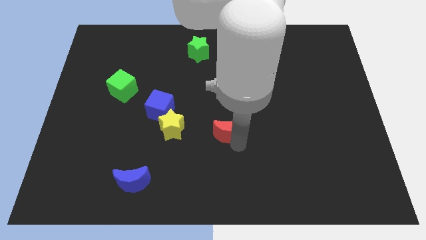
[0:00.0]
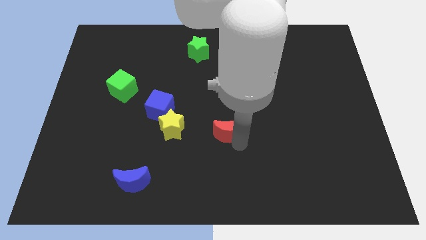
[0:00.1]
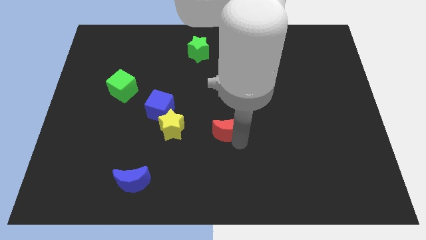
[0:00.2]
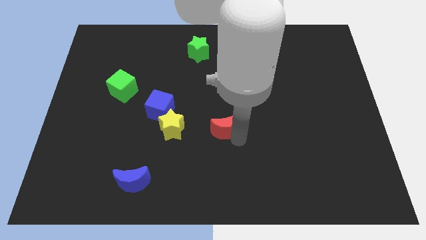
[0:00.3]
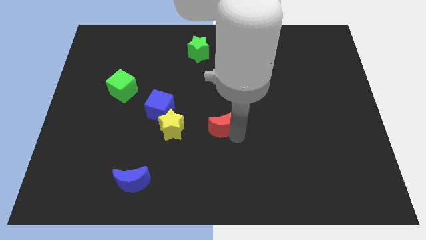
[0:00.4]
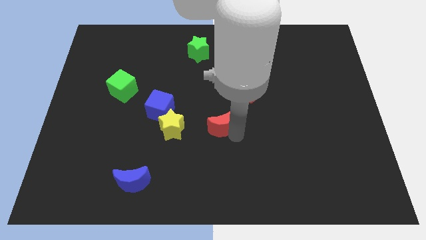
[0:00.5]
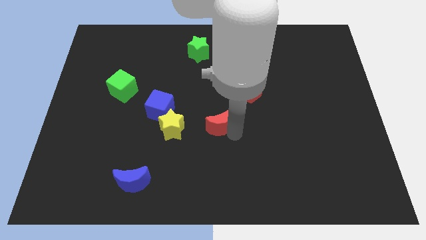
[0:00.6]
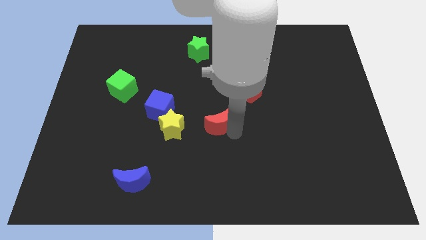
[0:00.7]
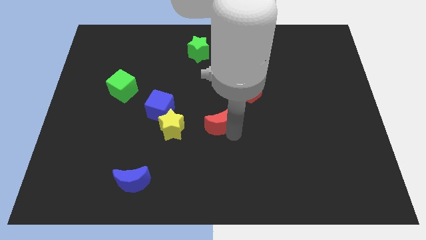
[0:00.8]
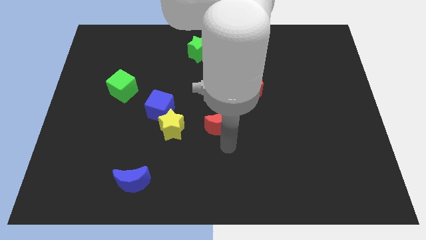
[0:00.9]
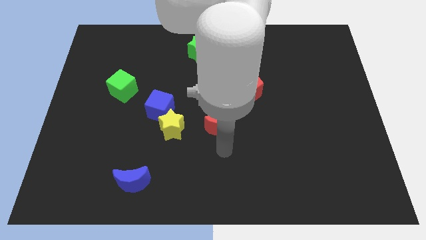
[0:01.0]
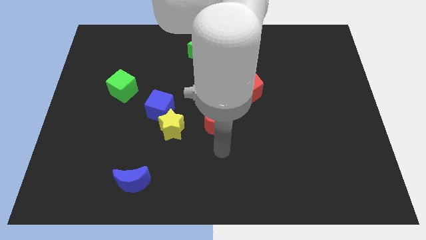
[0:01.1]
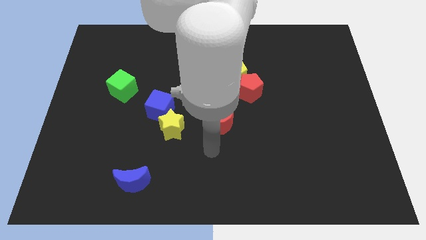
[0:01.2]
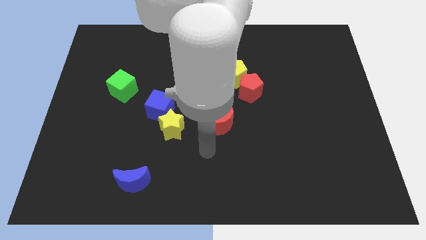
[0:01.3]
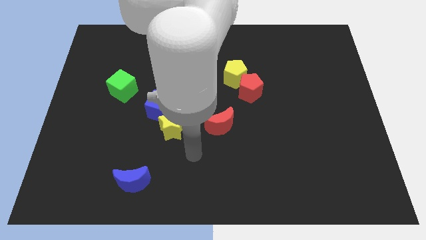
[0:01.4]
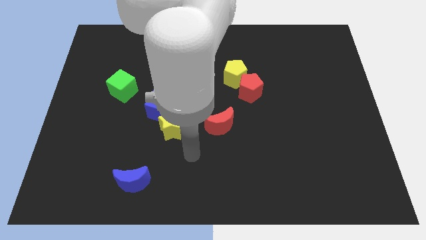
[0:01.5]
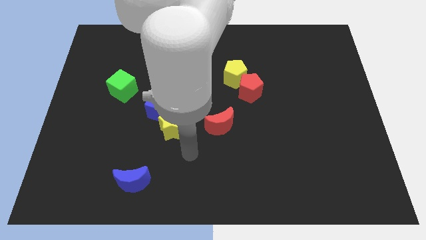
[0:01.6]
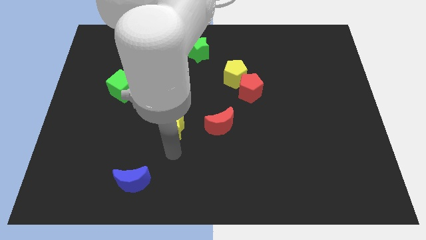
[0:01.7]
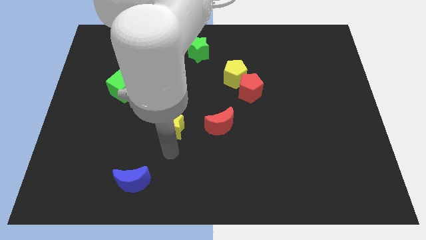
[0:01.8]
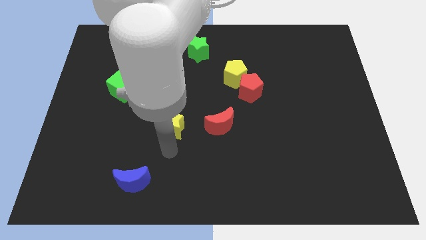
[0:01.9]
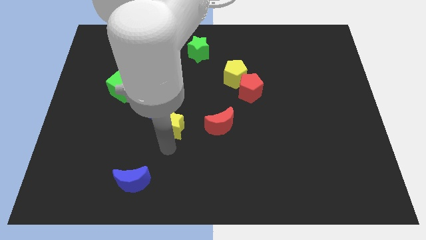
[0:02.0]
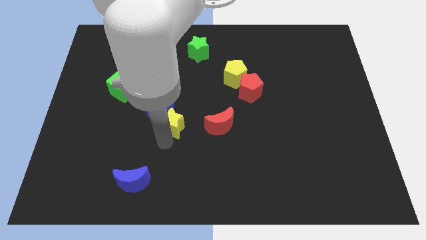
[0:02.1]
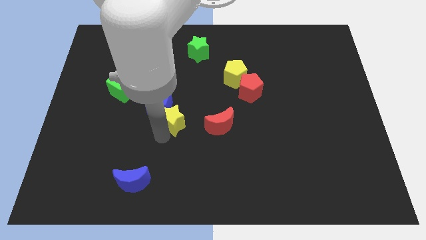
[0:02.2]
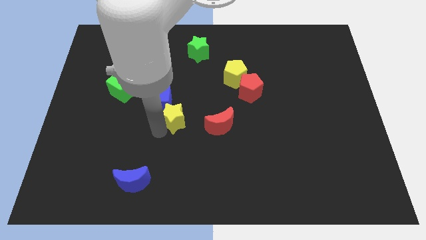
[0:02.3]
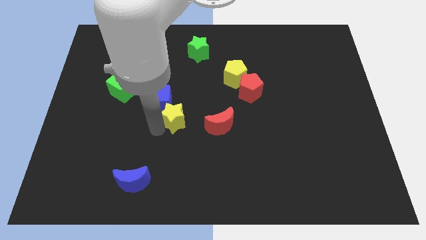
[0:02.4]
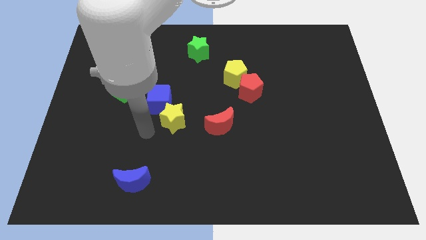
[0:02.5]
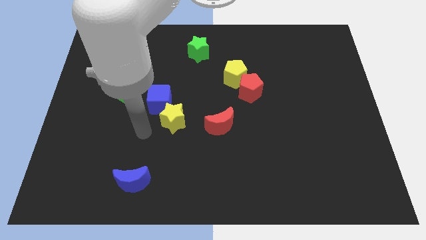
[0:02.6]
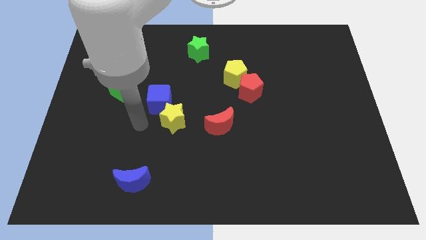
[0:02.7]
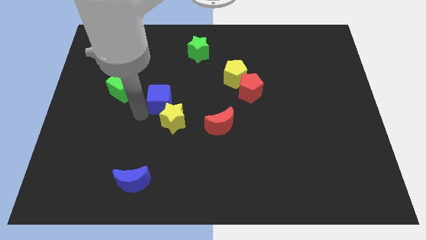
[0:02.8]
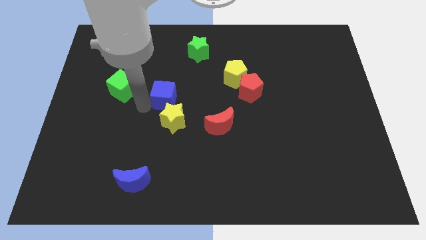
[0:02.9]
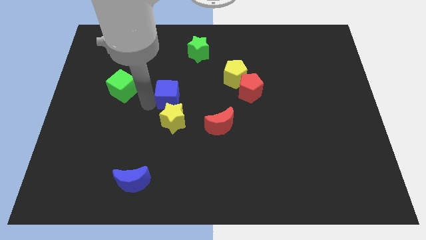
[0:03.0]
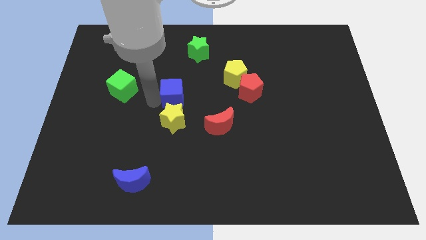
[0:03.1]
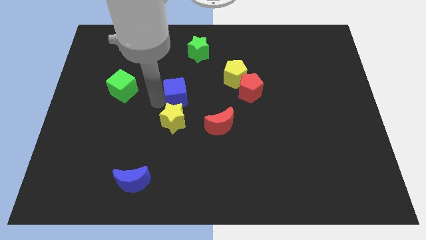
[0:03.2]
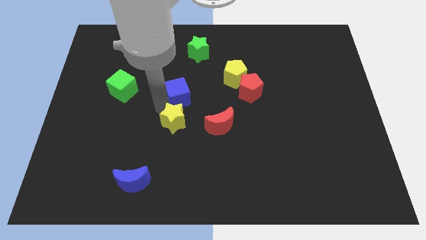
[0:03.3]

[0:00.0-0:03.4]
place the blue cube above the yellow star

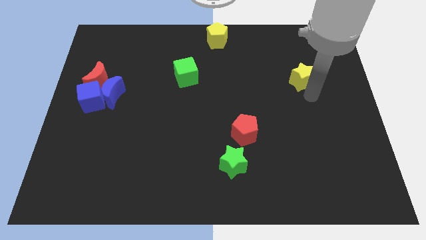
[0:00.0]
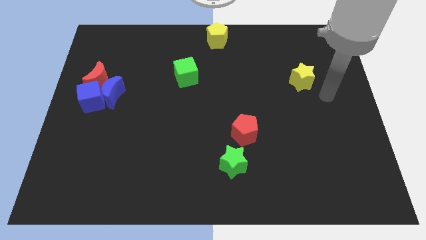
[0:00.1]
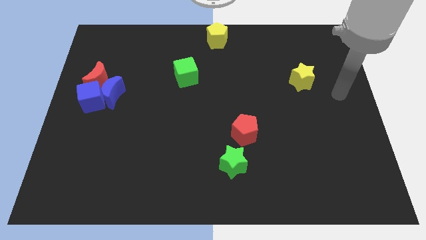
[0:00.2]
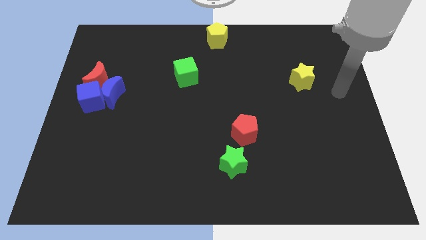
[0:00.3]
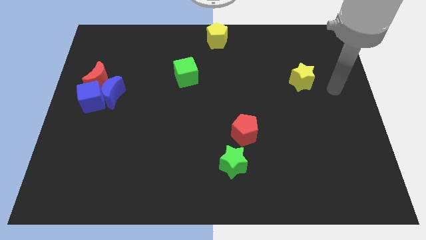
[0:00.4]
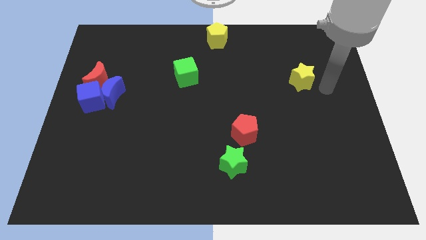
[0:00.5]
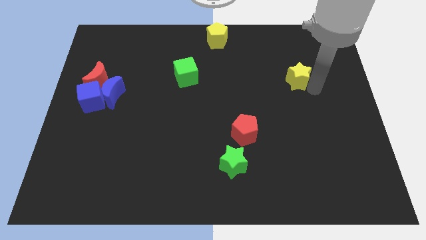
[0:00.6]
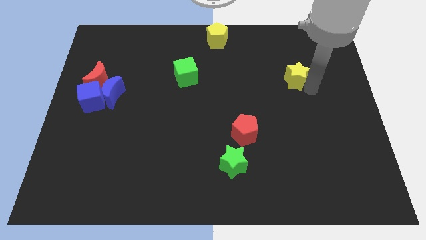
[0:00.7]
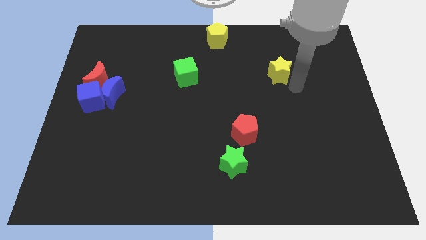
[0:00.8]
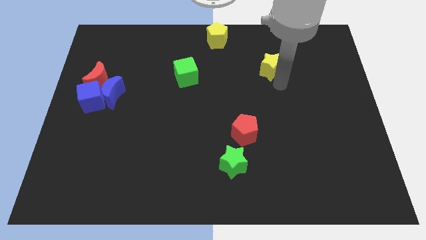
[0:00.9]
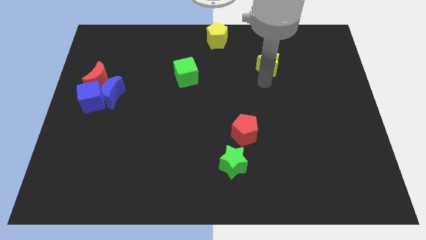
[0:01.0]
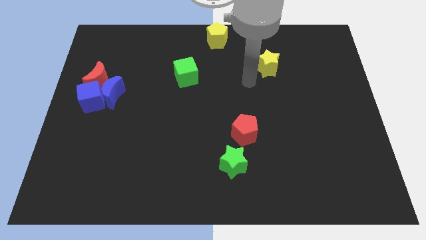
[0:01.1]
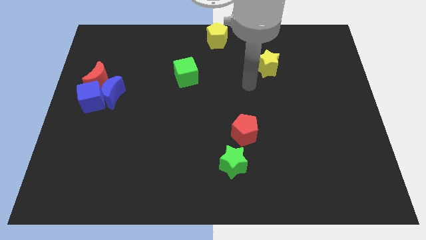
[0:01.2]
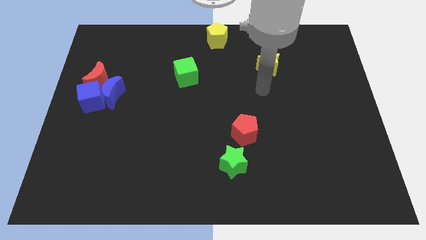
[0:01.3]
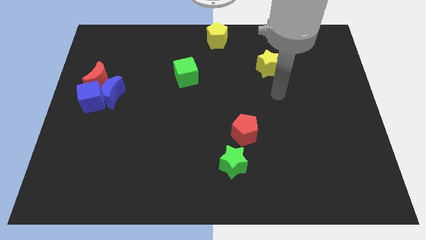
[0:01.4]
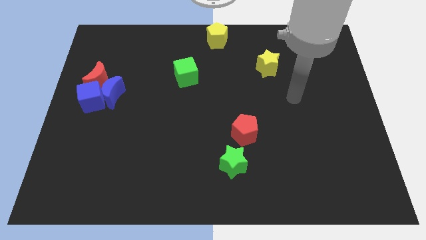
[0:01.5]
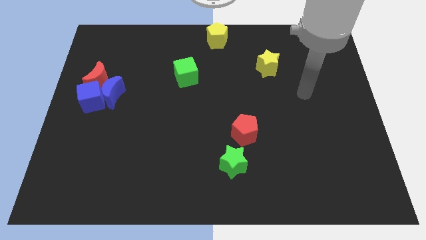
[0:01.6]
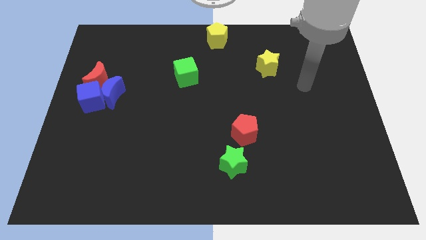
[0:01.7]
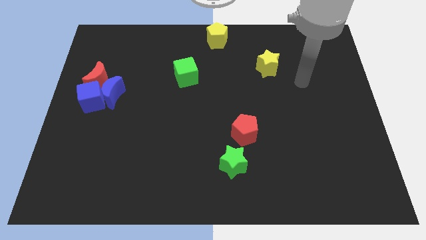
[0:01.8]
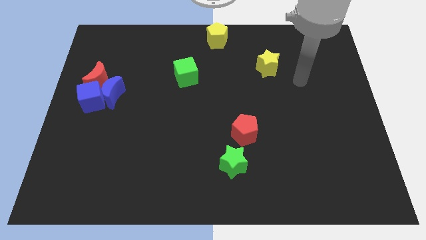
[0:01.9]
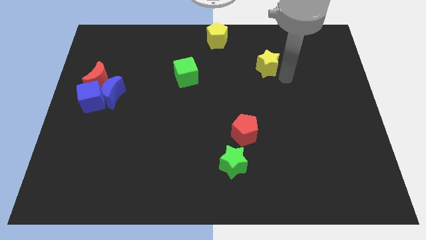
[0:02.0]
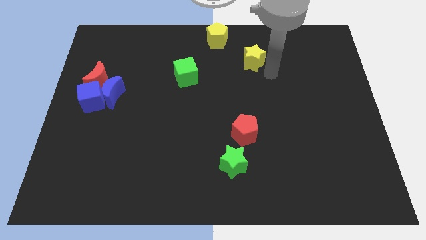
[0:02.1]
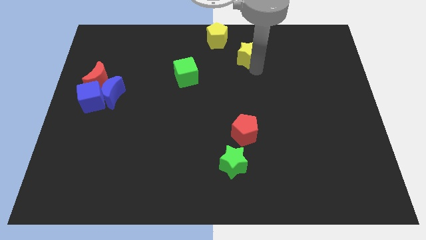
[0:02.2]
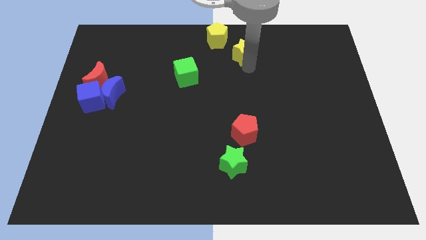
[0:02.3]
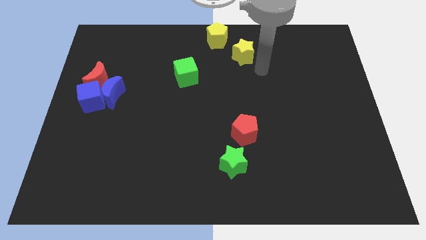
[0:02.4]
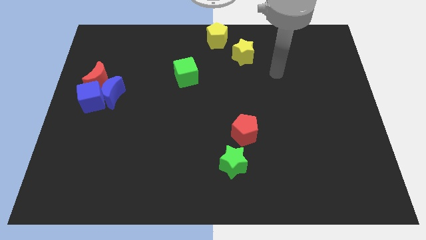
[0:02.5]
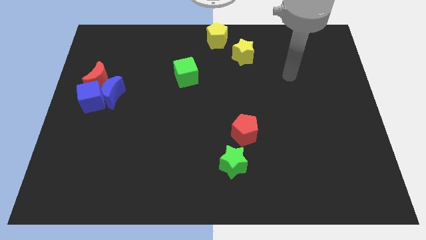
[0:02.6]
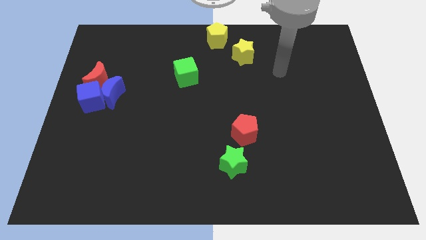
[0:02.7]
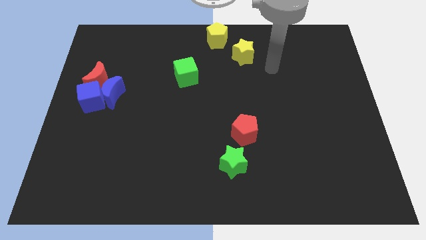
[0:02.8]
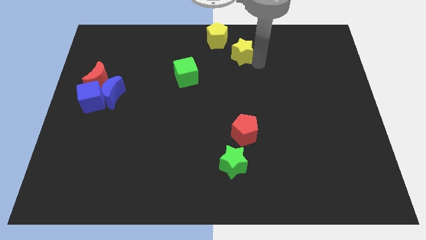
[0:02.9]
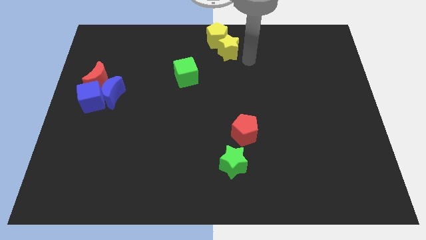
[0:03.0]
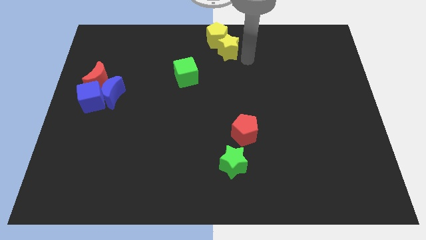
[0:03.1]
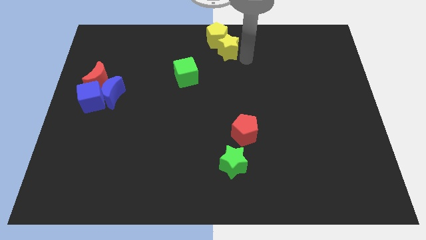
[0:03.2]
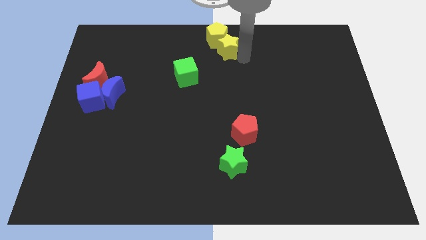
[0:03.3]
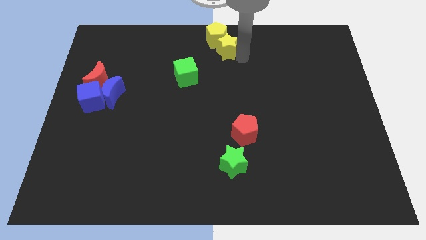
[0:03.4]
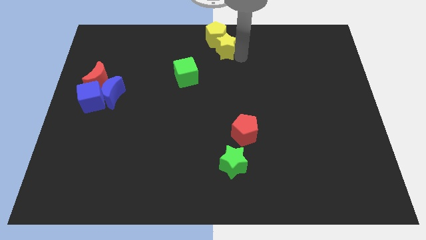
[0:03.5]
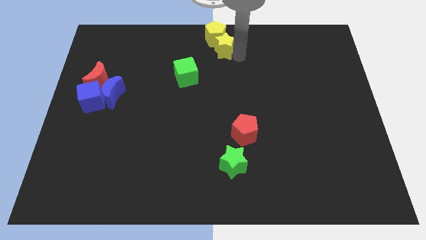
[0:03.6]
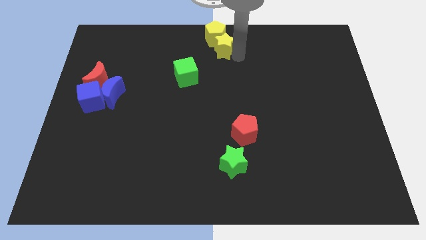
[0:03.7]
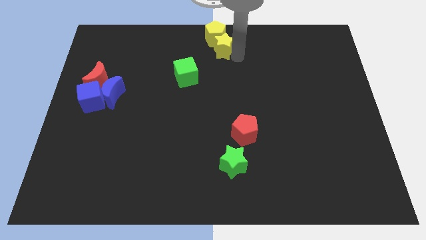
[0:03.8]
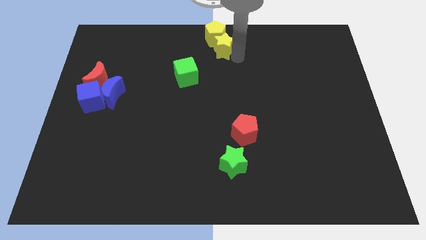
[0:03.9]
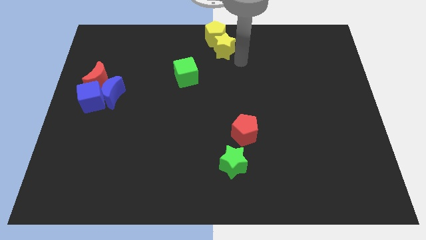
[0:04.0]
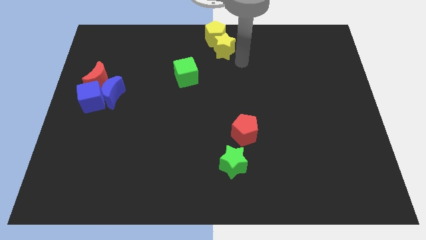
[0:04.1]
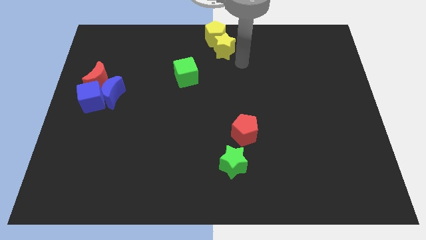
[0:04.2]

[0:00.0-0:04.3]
move the yellow star below the yellow pentagon

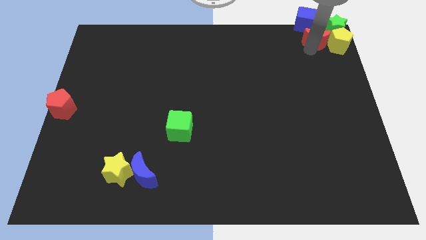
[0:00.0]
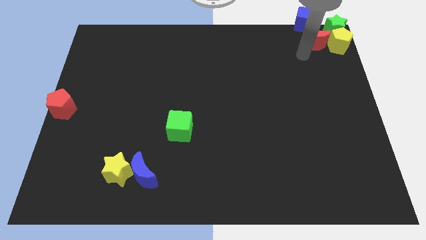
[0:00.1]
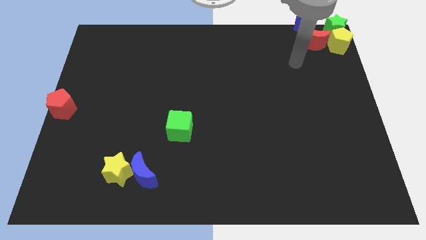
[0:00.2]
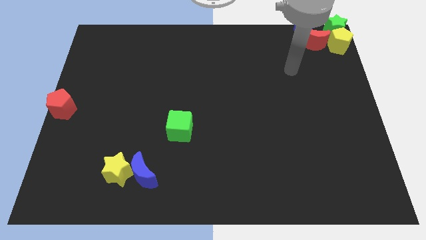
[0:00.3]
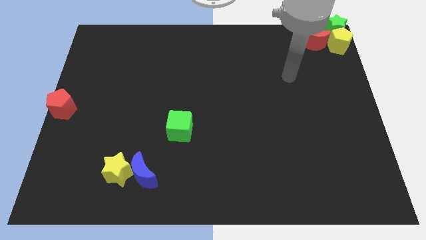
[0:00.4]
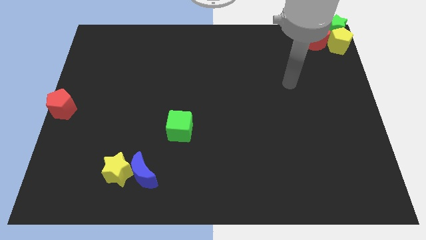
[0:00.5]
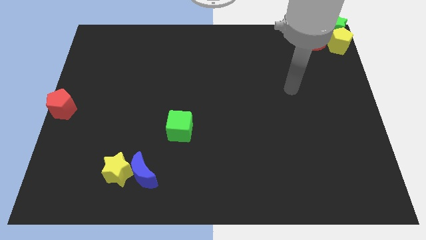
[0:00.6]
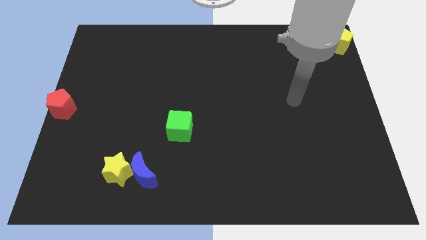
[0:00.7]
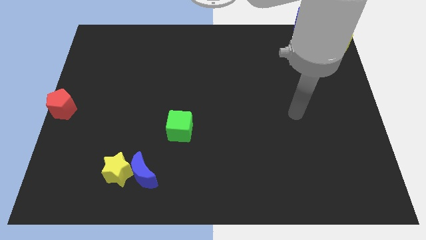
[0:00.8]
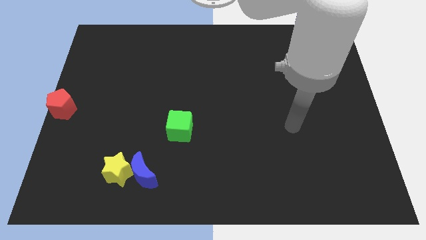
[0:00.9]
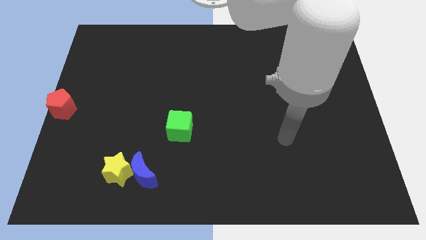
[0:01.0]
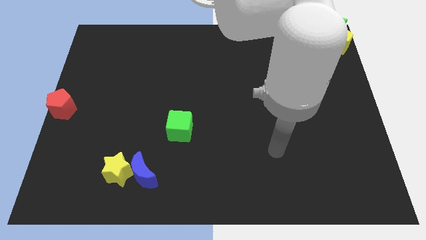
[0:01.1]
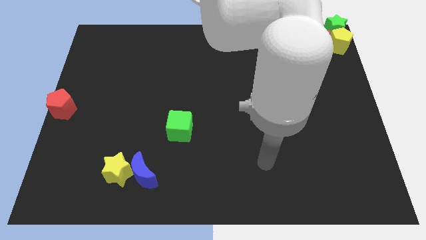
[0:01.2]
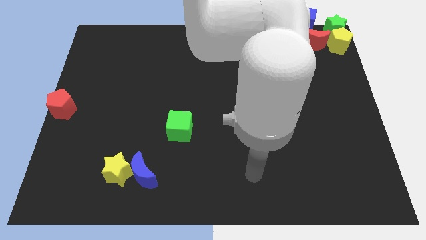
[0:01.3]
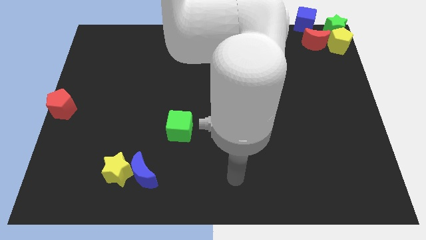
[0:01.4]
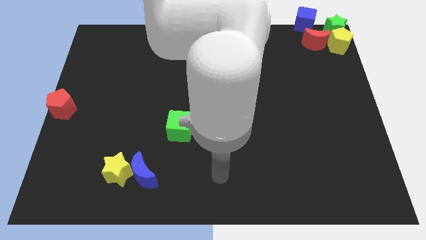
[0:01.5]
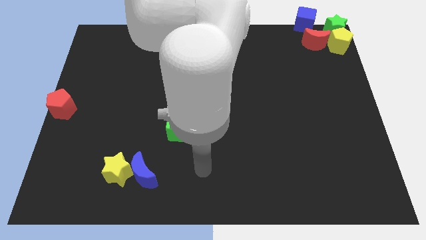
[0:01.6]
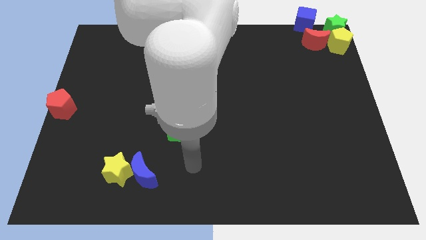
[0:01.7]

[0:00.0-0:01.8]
move the arm away from the red moon
